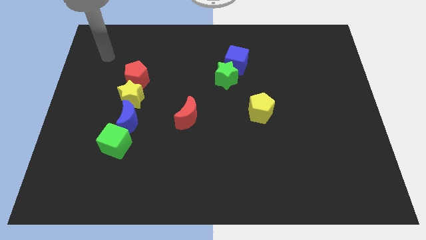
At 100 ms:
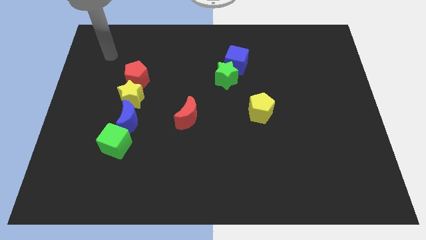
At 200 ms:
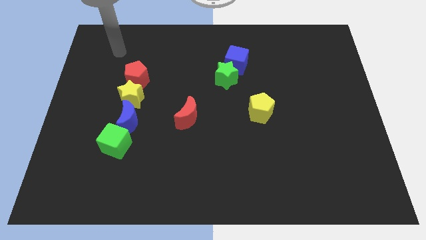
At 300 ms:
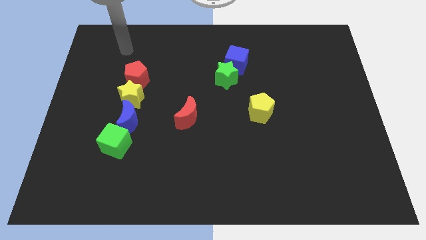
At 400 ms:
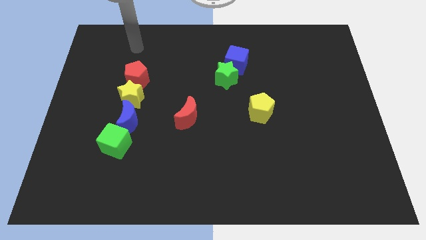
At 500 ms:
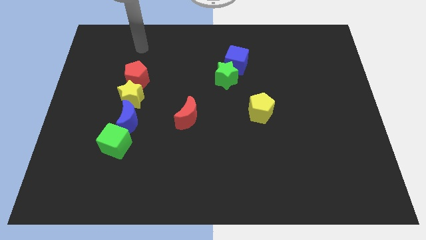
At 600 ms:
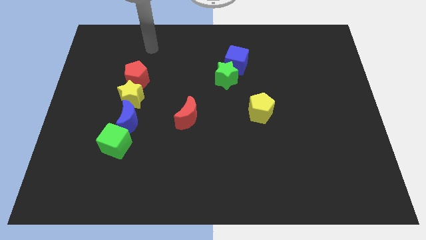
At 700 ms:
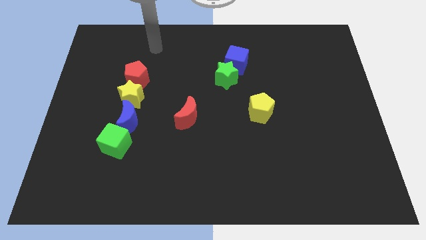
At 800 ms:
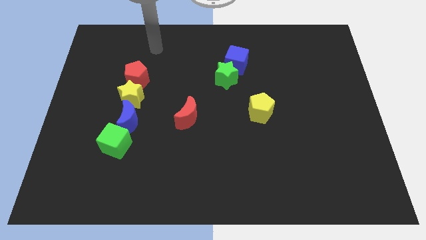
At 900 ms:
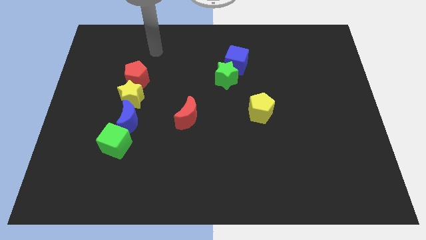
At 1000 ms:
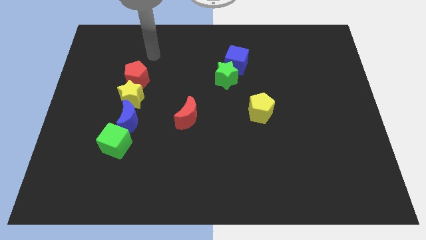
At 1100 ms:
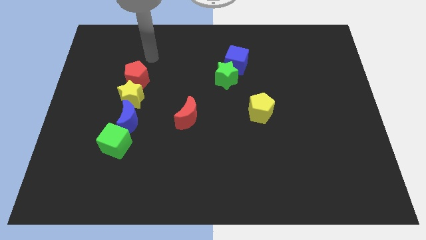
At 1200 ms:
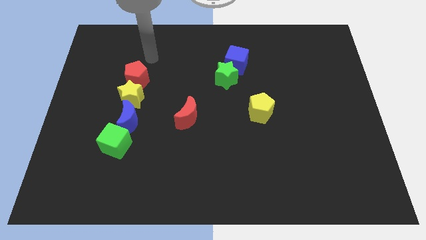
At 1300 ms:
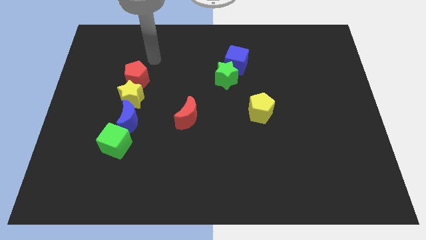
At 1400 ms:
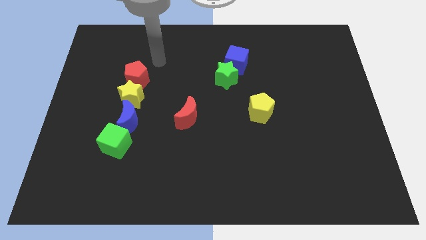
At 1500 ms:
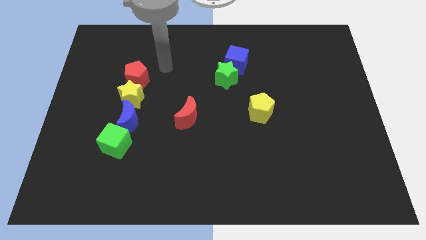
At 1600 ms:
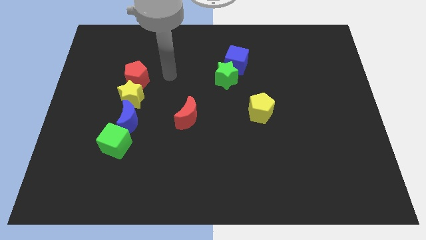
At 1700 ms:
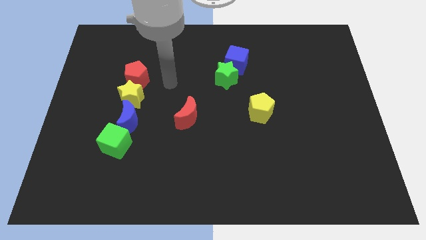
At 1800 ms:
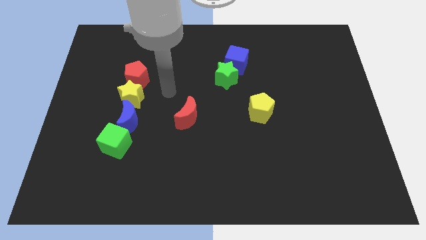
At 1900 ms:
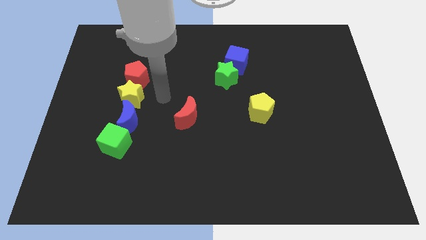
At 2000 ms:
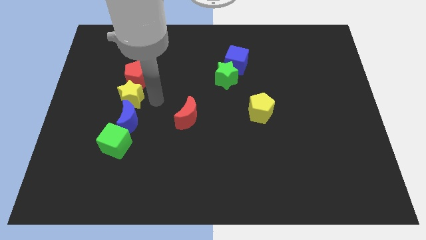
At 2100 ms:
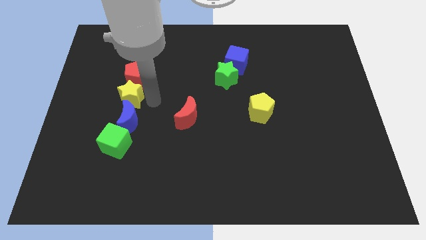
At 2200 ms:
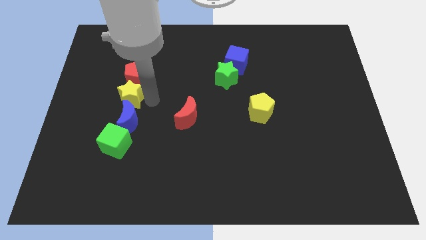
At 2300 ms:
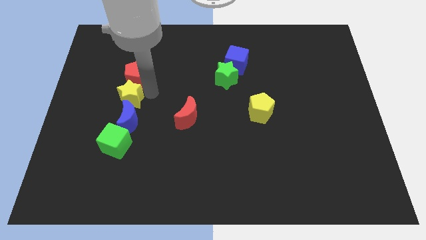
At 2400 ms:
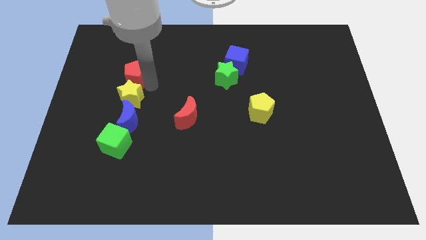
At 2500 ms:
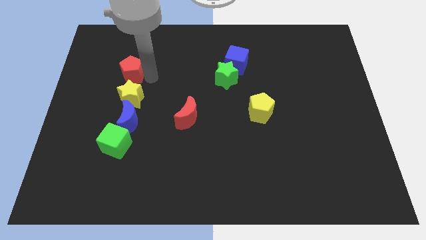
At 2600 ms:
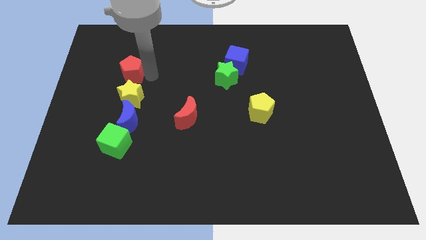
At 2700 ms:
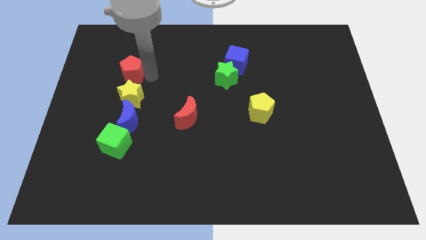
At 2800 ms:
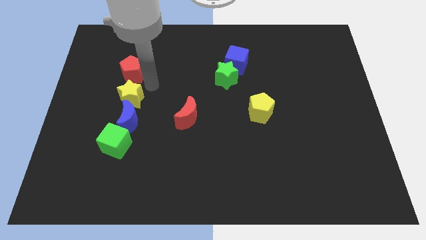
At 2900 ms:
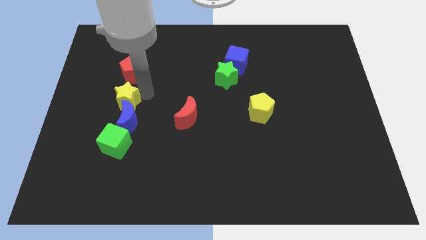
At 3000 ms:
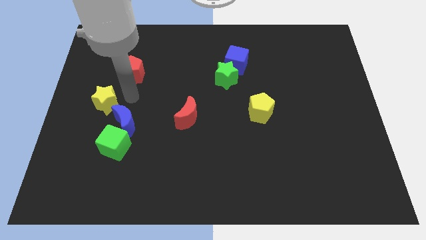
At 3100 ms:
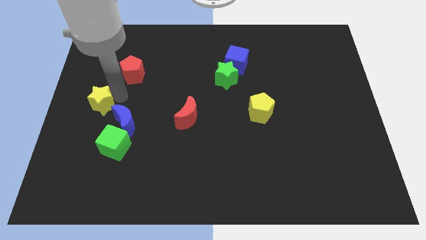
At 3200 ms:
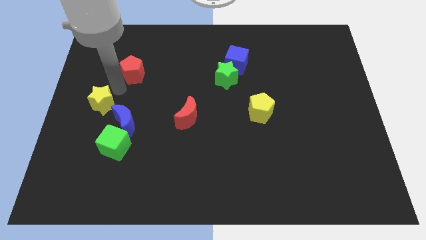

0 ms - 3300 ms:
push yellow star

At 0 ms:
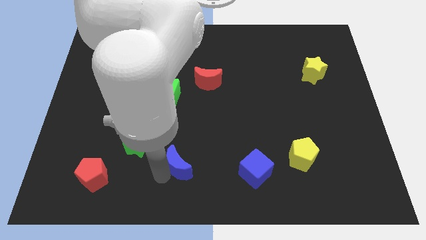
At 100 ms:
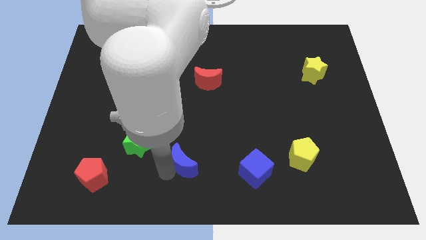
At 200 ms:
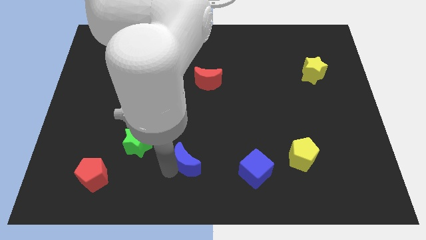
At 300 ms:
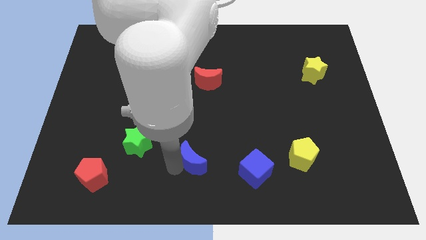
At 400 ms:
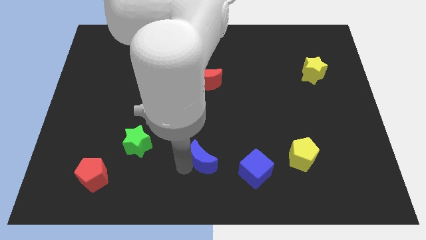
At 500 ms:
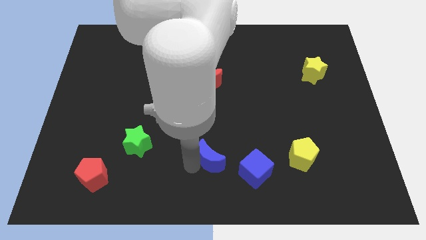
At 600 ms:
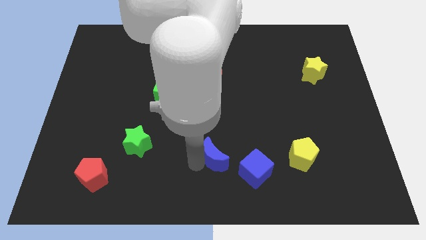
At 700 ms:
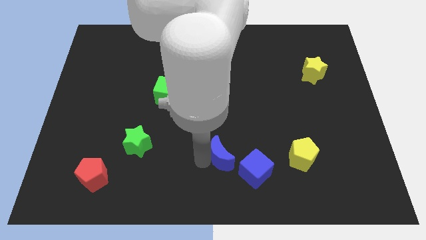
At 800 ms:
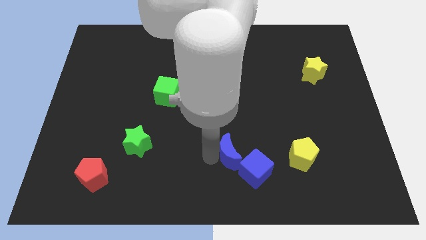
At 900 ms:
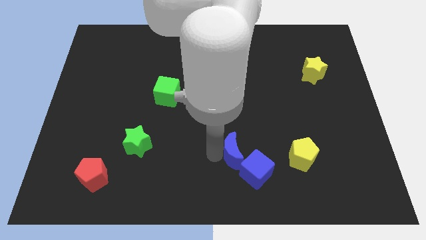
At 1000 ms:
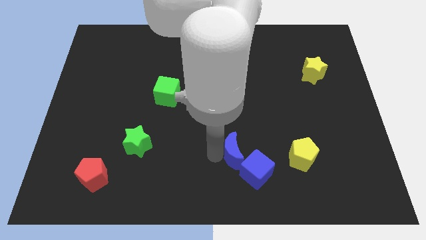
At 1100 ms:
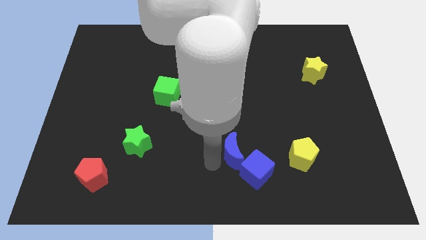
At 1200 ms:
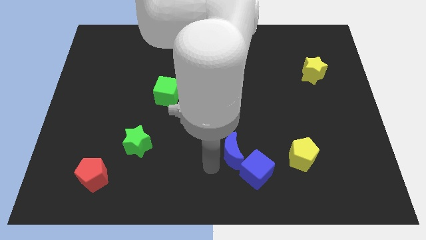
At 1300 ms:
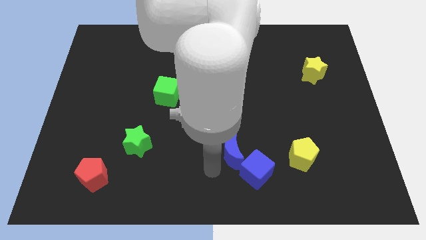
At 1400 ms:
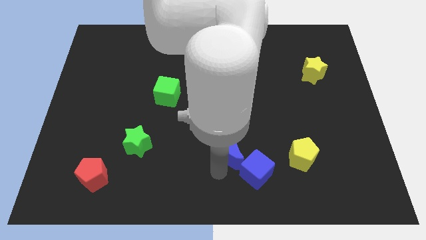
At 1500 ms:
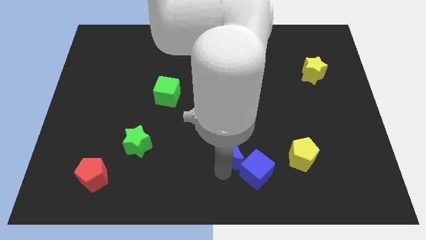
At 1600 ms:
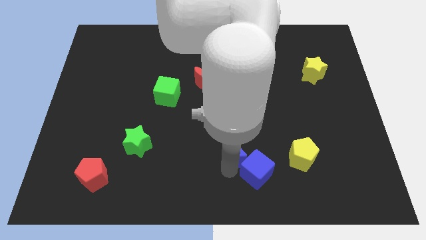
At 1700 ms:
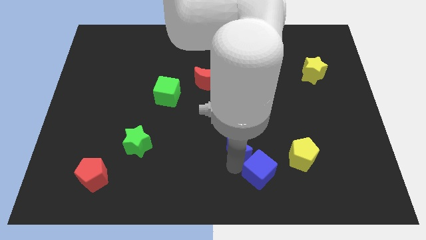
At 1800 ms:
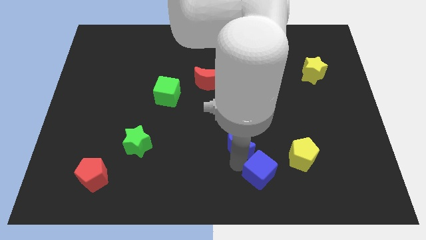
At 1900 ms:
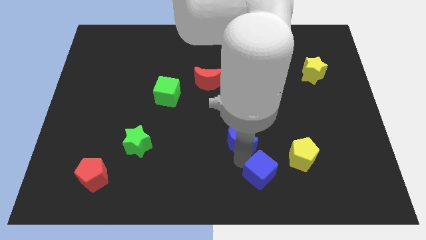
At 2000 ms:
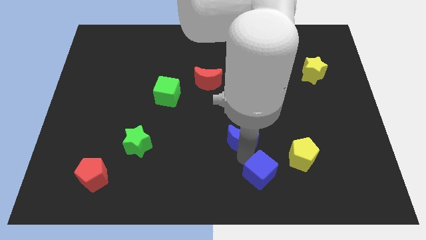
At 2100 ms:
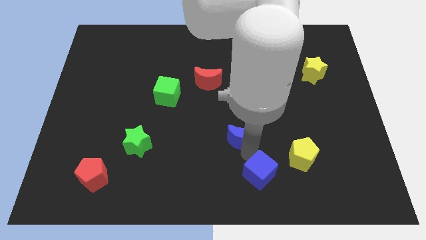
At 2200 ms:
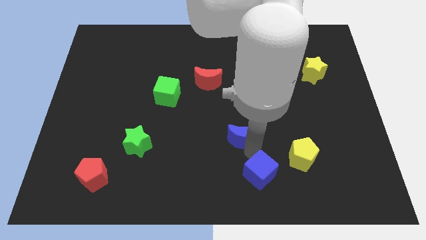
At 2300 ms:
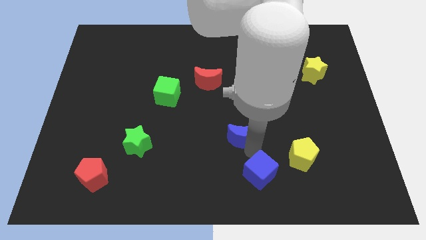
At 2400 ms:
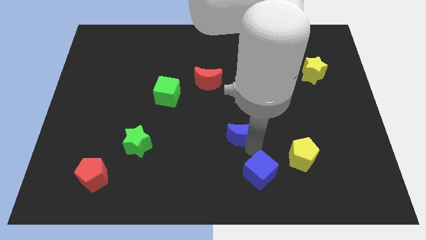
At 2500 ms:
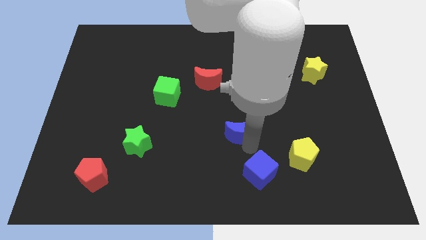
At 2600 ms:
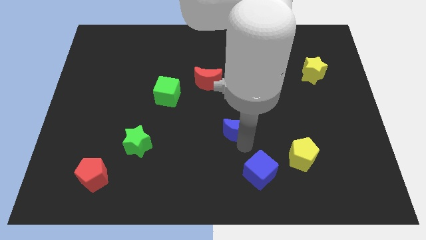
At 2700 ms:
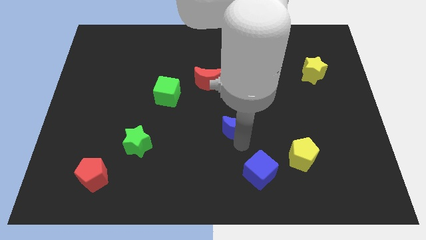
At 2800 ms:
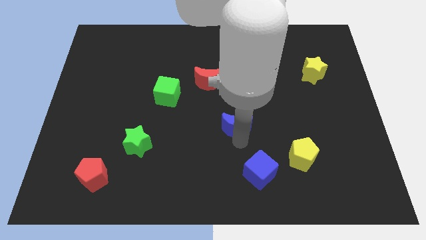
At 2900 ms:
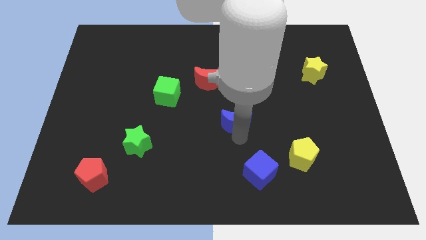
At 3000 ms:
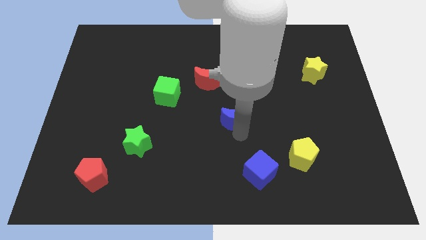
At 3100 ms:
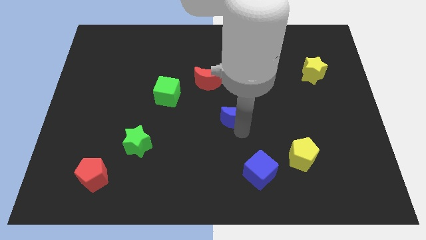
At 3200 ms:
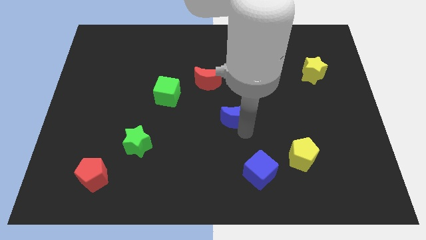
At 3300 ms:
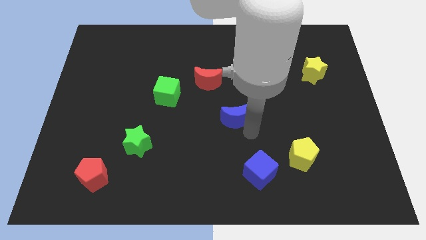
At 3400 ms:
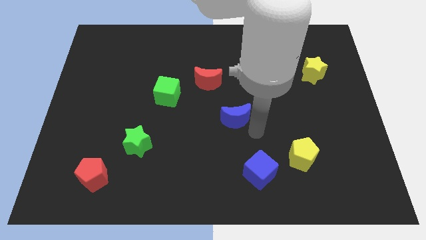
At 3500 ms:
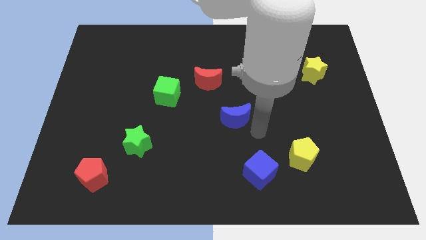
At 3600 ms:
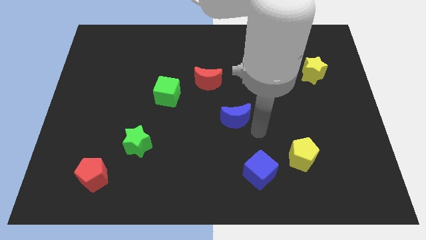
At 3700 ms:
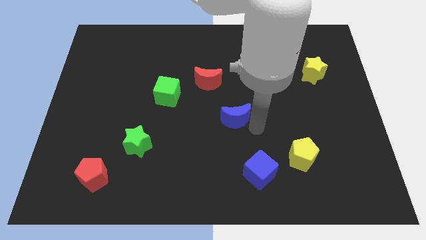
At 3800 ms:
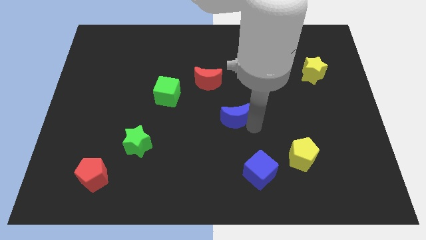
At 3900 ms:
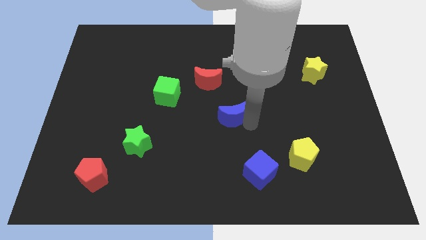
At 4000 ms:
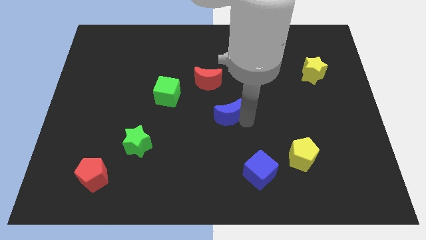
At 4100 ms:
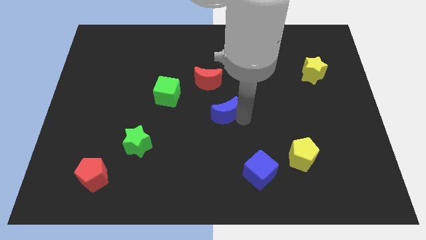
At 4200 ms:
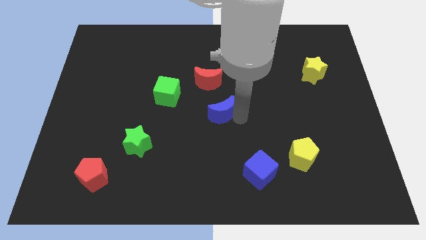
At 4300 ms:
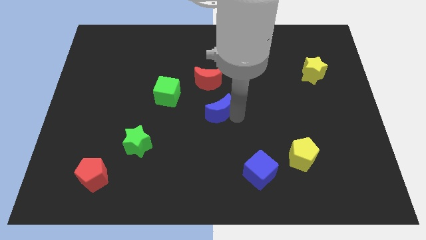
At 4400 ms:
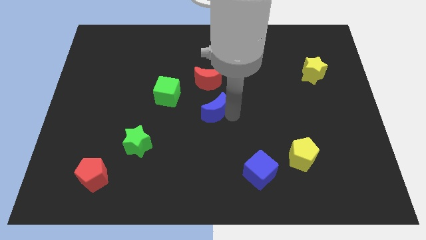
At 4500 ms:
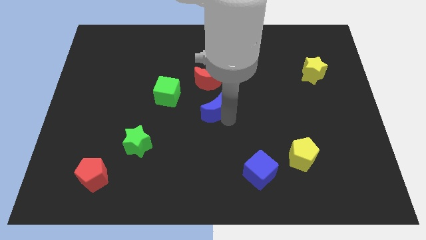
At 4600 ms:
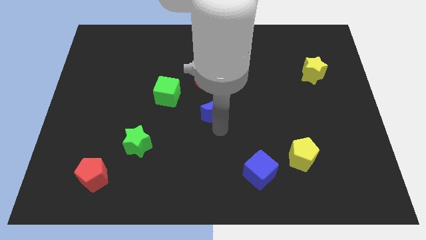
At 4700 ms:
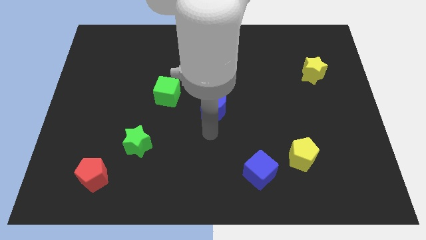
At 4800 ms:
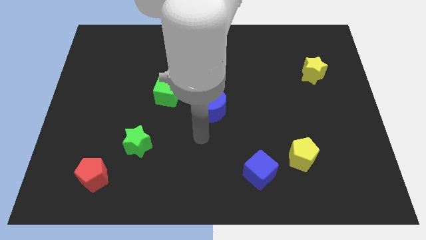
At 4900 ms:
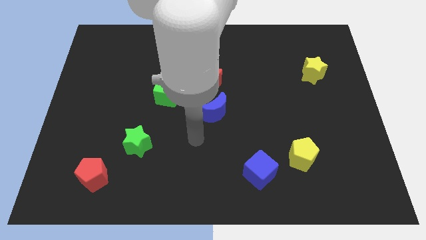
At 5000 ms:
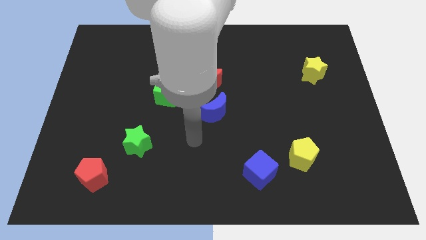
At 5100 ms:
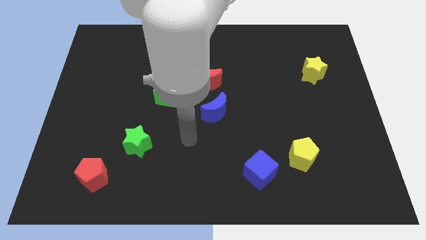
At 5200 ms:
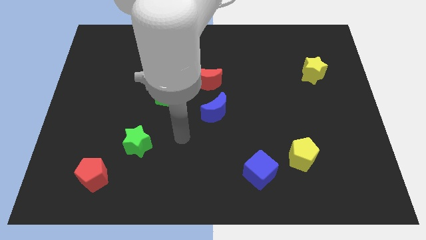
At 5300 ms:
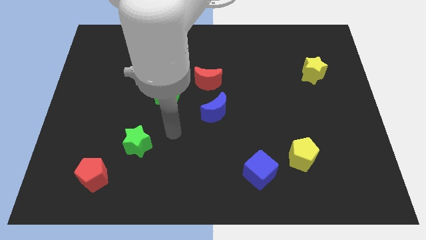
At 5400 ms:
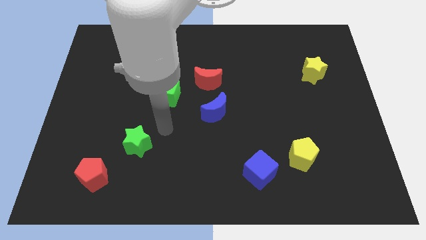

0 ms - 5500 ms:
move the blue moon to the center of the board

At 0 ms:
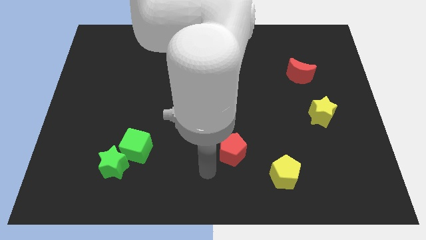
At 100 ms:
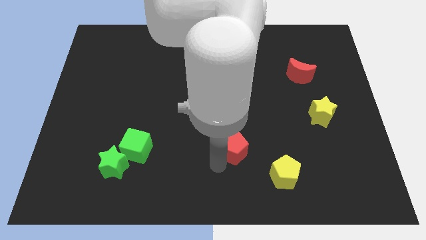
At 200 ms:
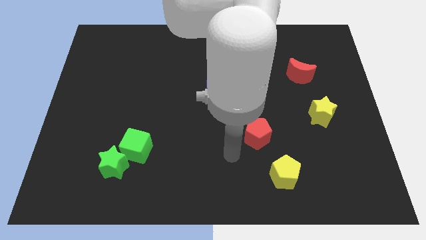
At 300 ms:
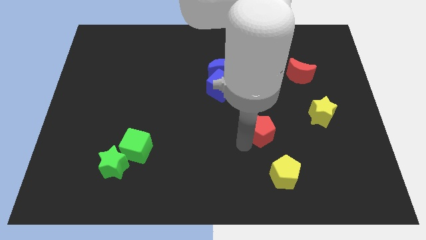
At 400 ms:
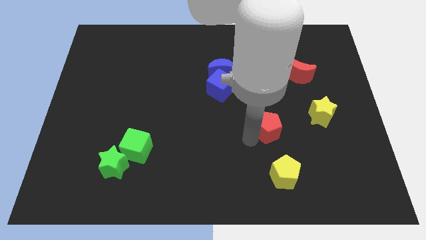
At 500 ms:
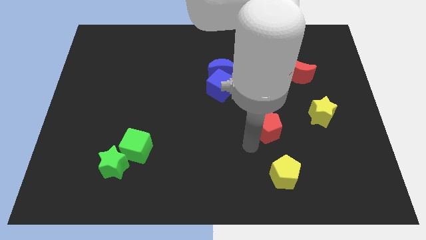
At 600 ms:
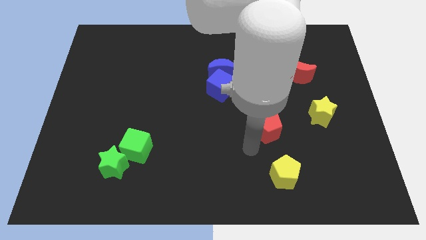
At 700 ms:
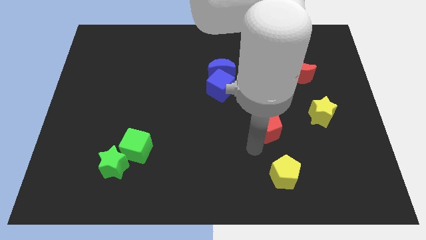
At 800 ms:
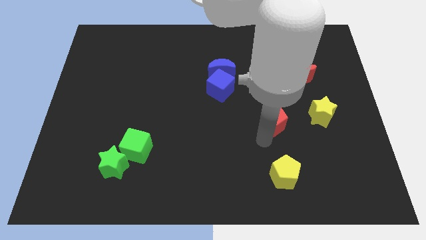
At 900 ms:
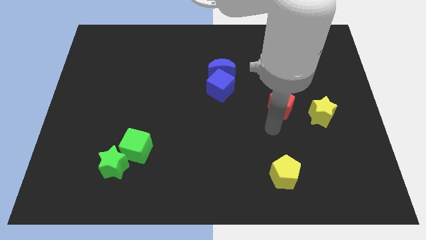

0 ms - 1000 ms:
move the red pentagon to the left of the yellow star
